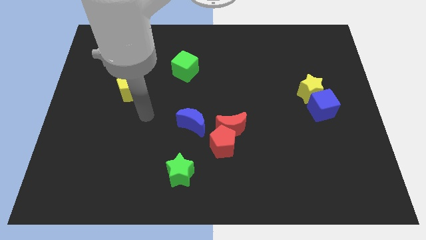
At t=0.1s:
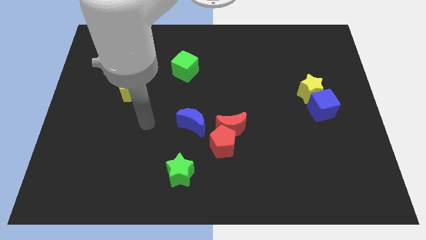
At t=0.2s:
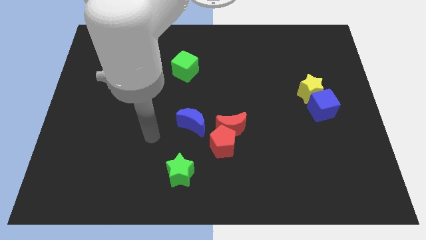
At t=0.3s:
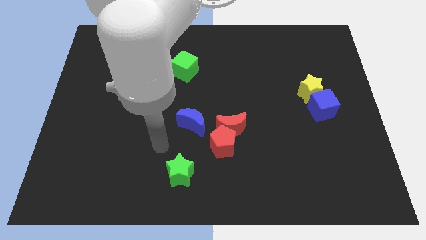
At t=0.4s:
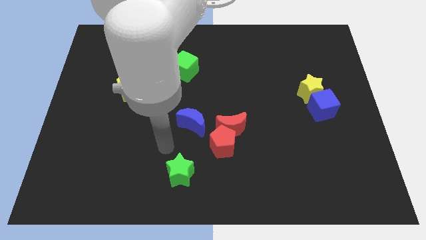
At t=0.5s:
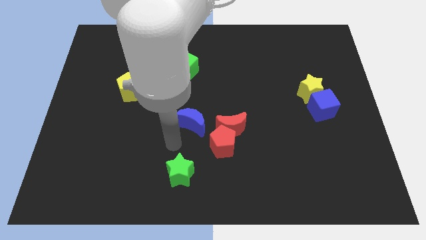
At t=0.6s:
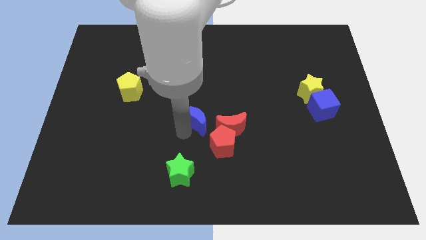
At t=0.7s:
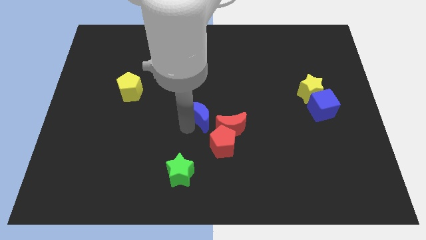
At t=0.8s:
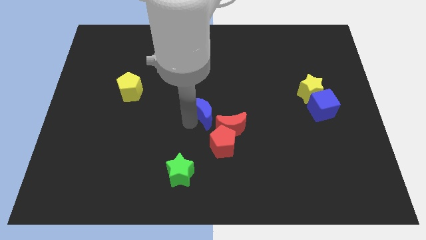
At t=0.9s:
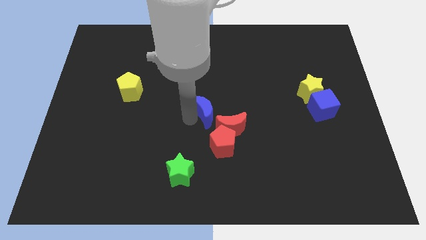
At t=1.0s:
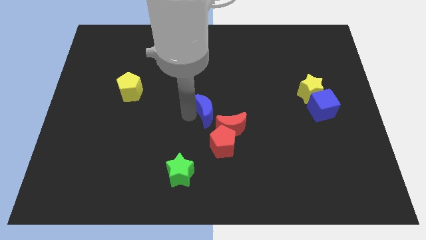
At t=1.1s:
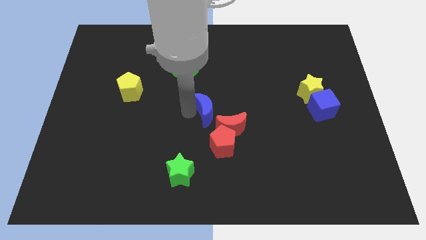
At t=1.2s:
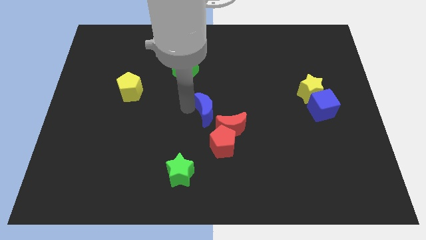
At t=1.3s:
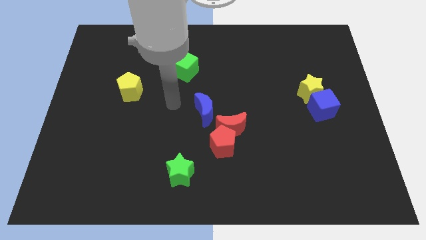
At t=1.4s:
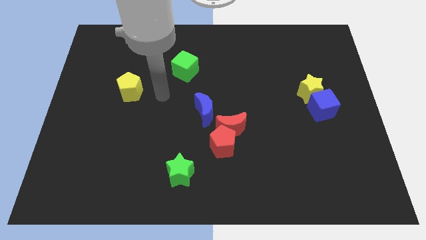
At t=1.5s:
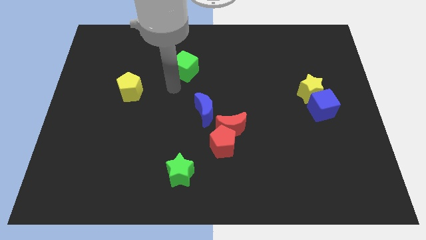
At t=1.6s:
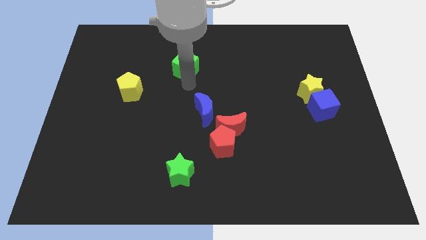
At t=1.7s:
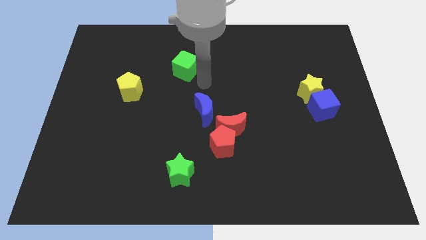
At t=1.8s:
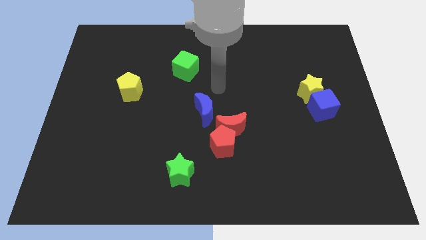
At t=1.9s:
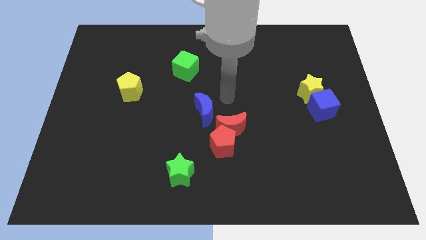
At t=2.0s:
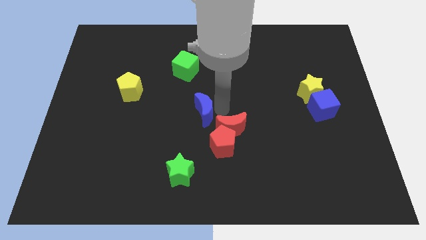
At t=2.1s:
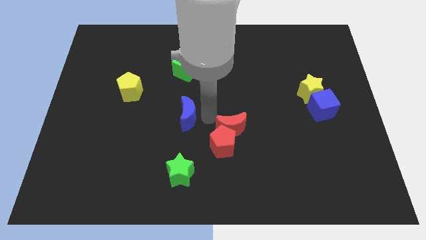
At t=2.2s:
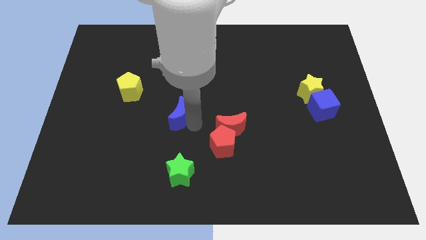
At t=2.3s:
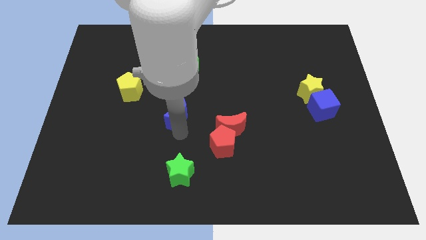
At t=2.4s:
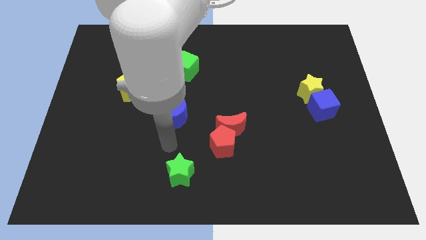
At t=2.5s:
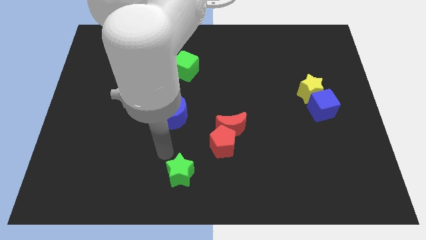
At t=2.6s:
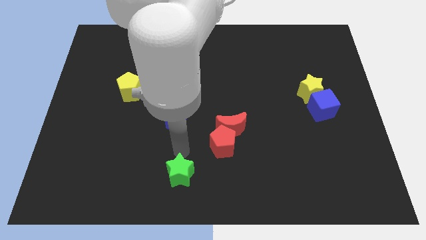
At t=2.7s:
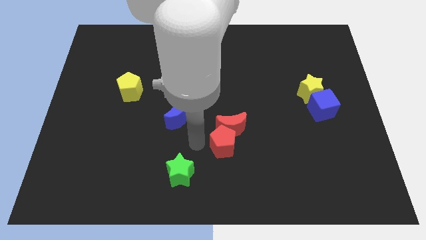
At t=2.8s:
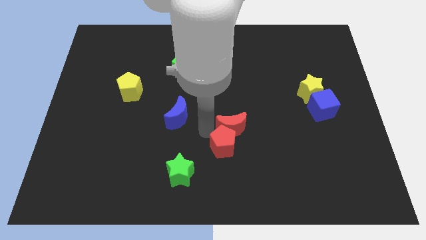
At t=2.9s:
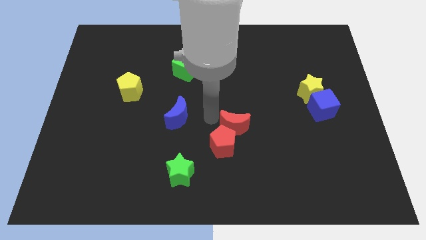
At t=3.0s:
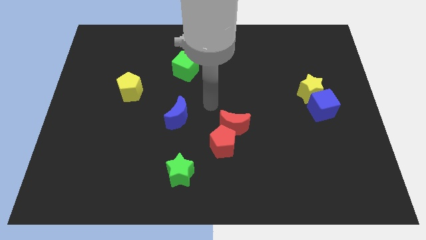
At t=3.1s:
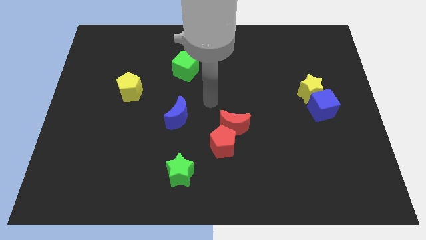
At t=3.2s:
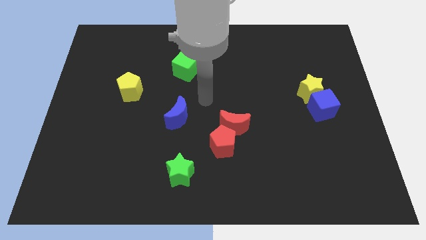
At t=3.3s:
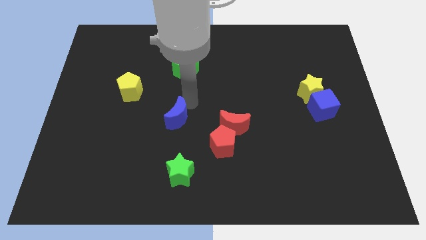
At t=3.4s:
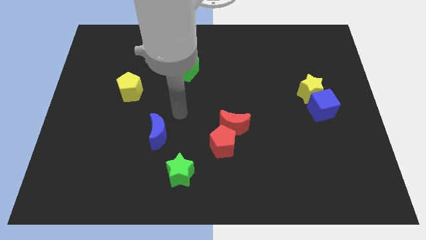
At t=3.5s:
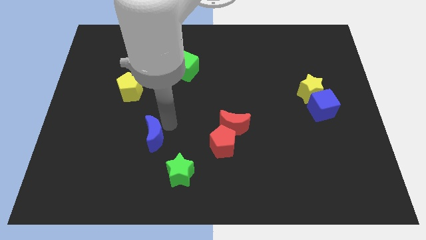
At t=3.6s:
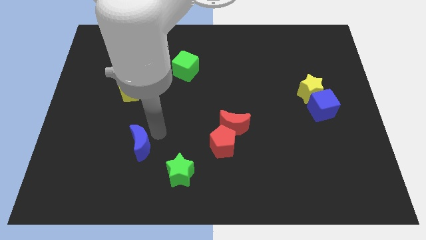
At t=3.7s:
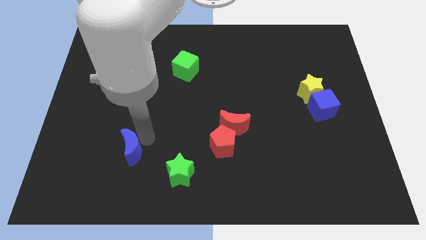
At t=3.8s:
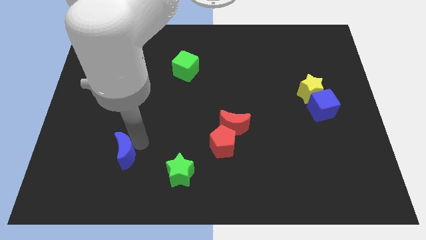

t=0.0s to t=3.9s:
slightly move the crescents on opposite directions

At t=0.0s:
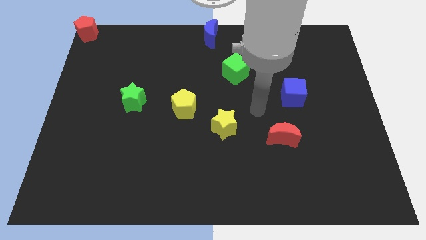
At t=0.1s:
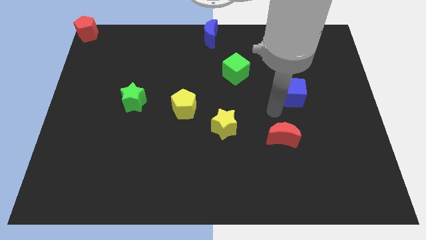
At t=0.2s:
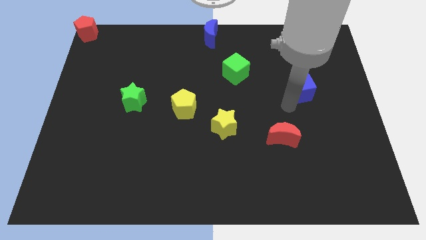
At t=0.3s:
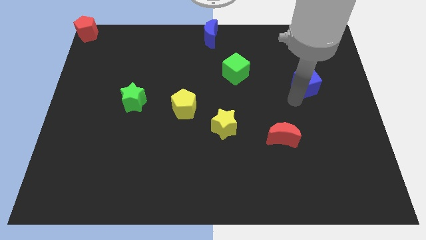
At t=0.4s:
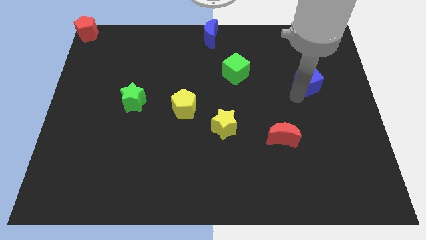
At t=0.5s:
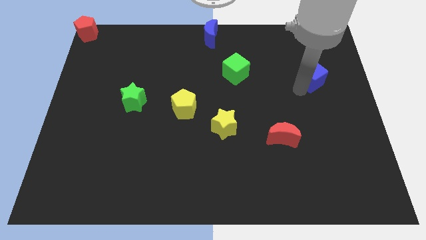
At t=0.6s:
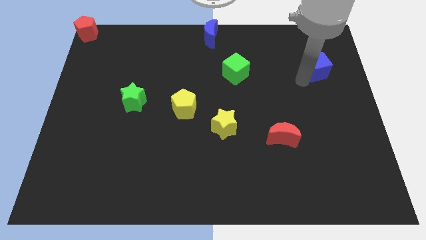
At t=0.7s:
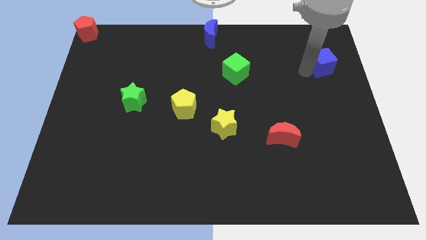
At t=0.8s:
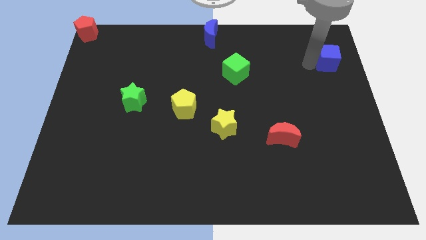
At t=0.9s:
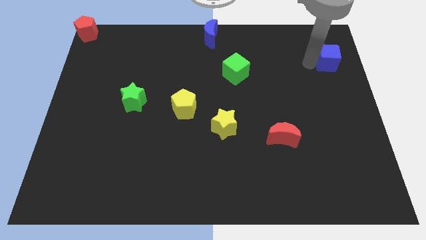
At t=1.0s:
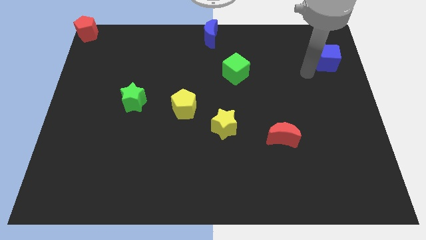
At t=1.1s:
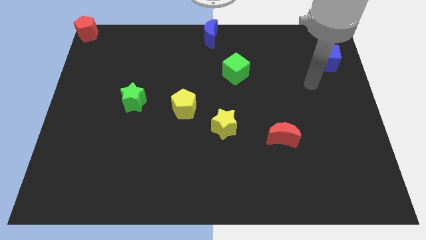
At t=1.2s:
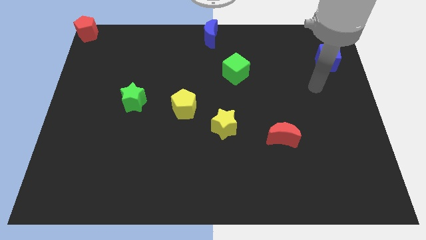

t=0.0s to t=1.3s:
push the blue cube towards the top right side of the board

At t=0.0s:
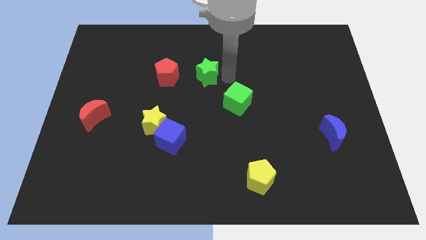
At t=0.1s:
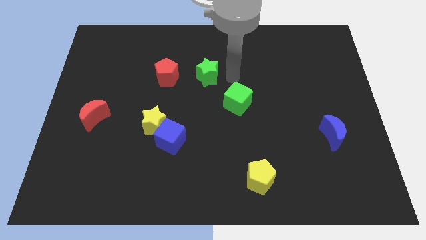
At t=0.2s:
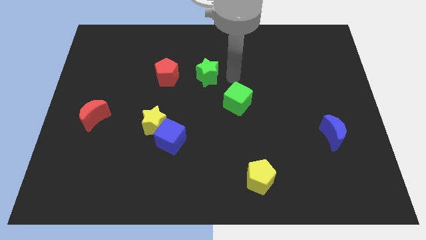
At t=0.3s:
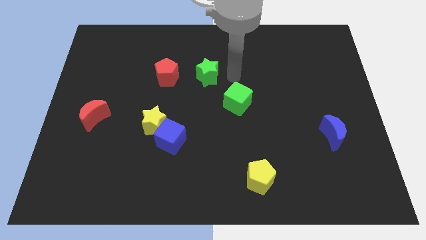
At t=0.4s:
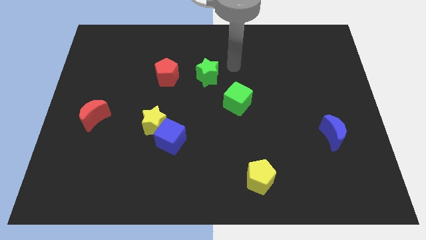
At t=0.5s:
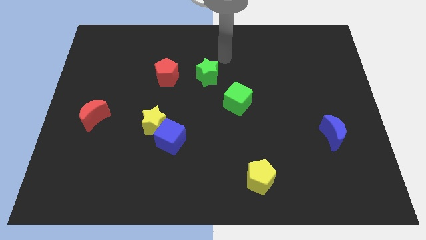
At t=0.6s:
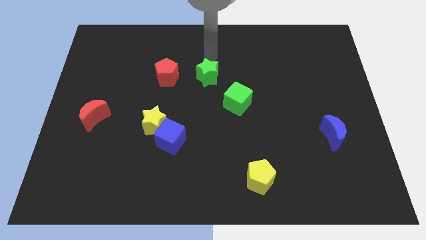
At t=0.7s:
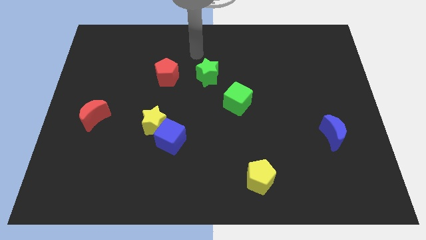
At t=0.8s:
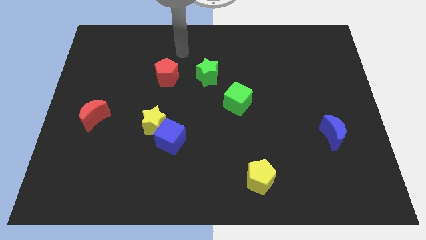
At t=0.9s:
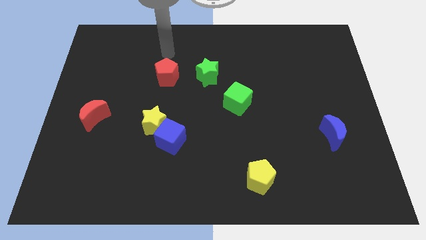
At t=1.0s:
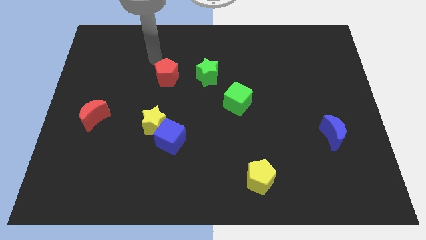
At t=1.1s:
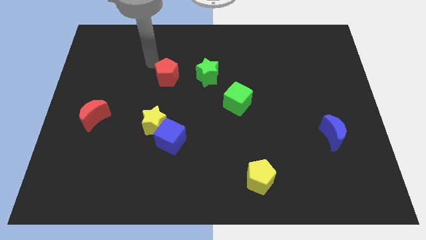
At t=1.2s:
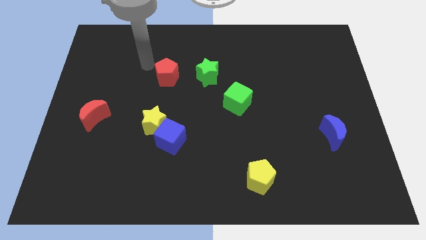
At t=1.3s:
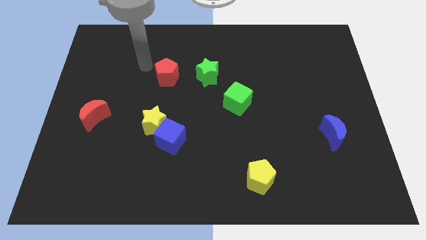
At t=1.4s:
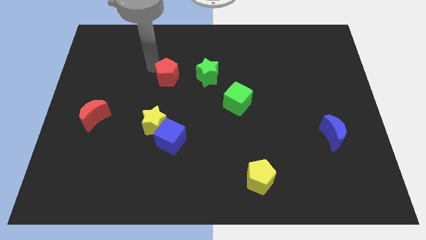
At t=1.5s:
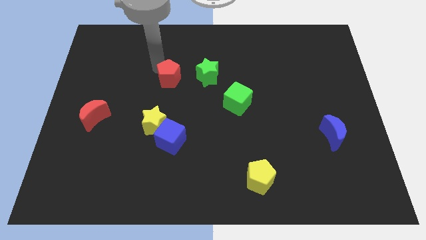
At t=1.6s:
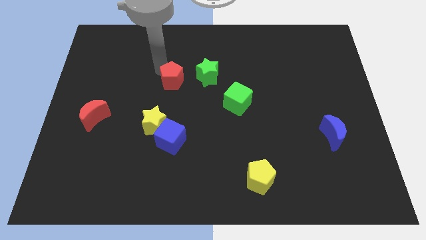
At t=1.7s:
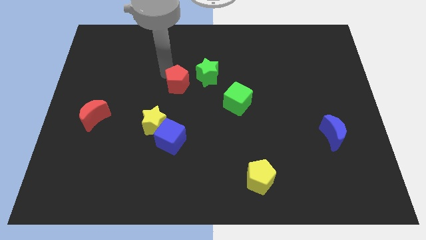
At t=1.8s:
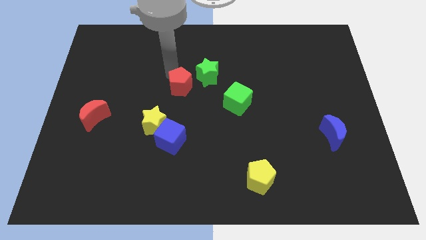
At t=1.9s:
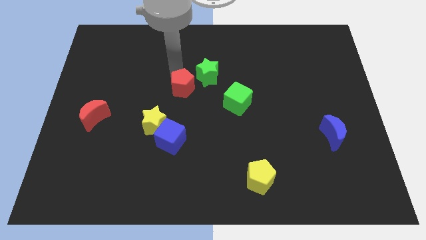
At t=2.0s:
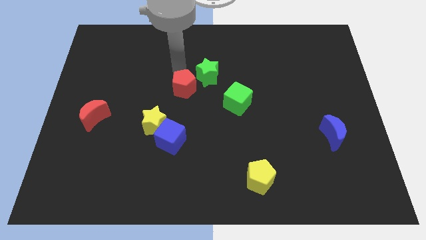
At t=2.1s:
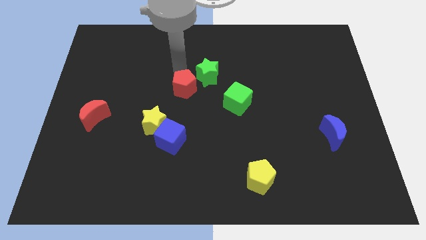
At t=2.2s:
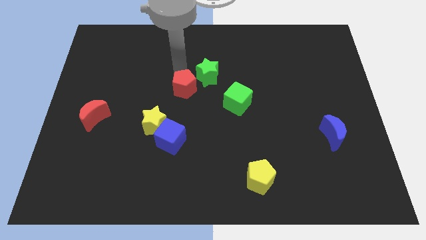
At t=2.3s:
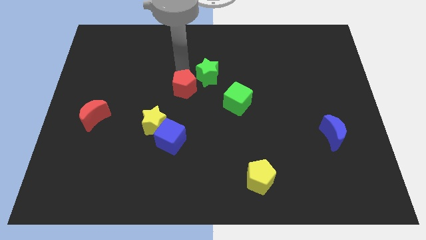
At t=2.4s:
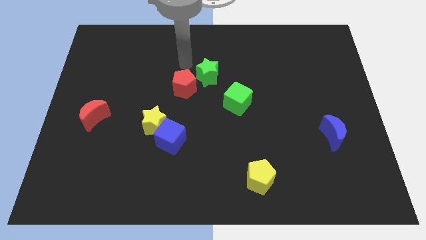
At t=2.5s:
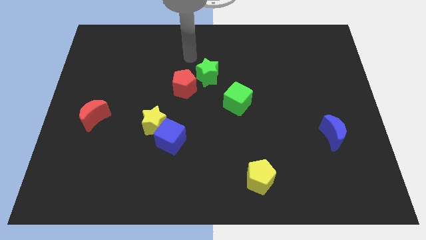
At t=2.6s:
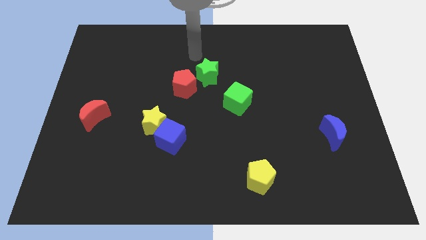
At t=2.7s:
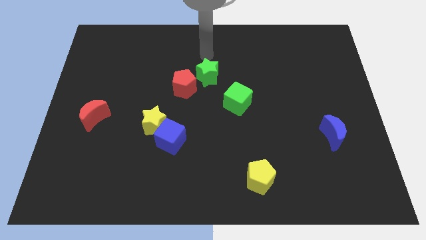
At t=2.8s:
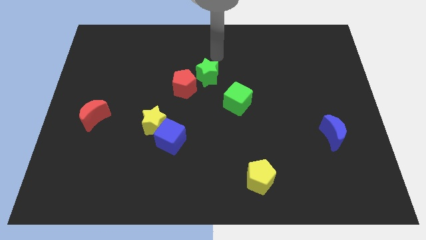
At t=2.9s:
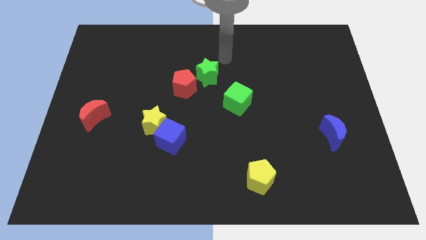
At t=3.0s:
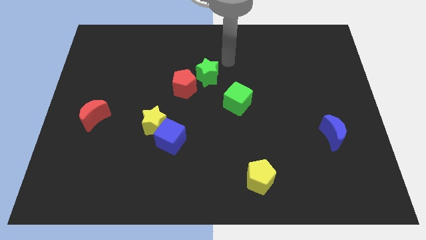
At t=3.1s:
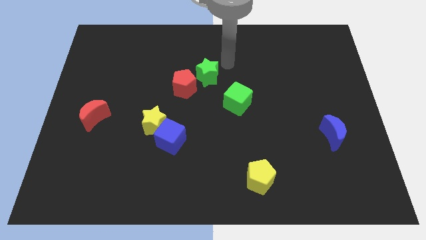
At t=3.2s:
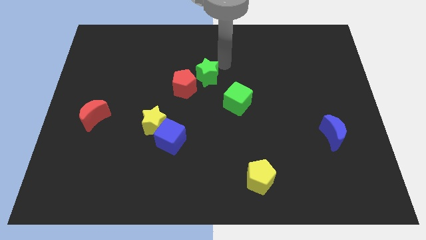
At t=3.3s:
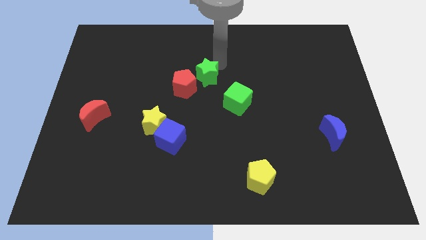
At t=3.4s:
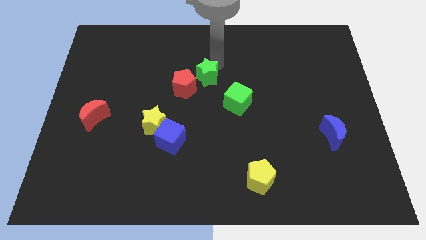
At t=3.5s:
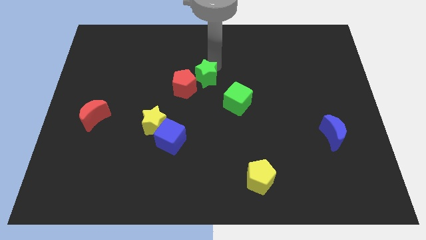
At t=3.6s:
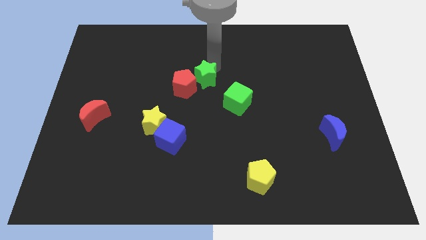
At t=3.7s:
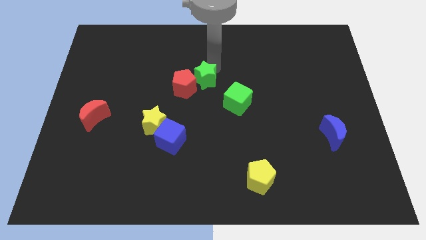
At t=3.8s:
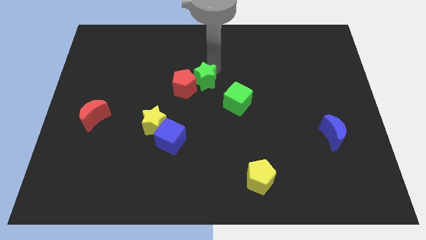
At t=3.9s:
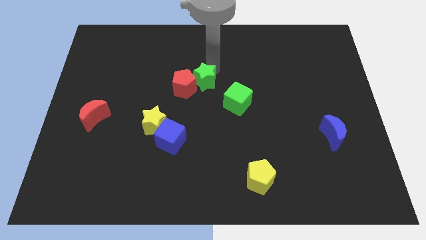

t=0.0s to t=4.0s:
put the red pentagon and the green star together
